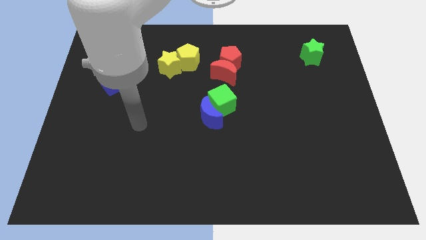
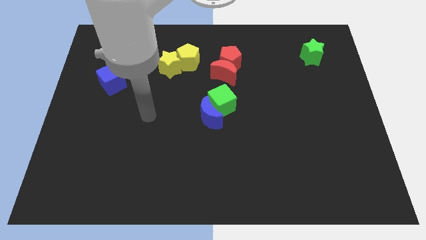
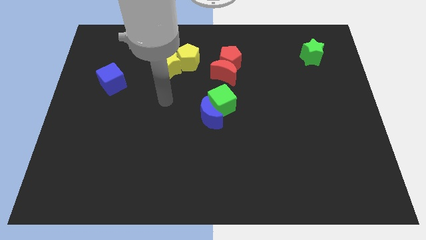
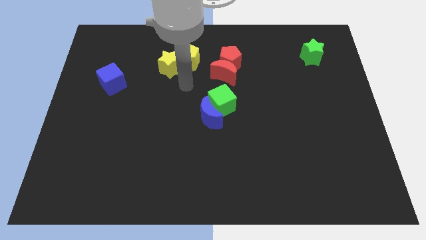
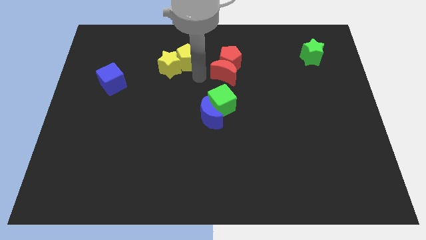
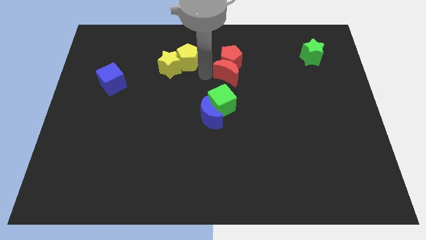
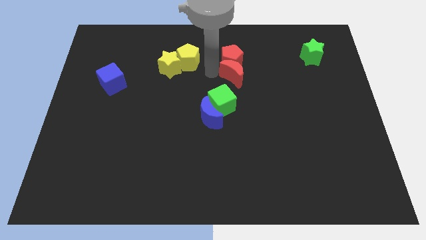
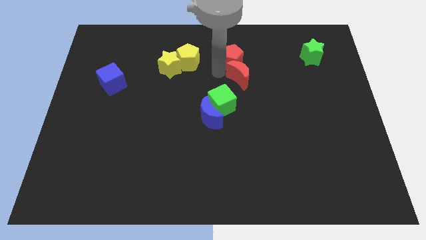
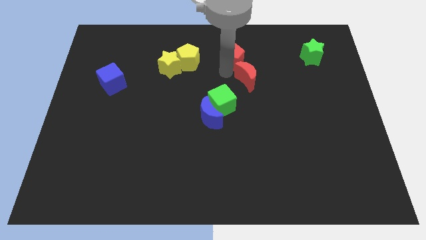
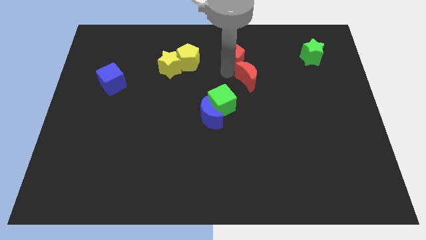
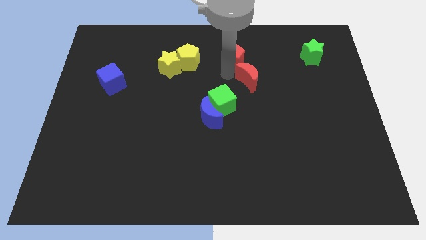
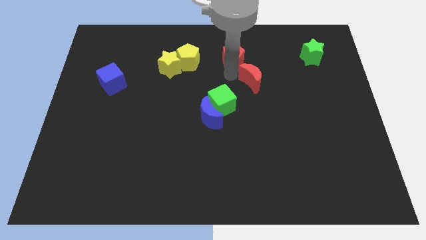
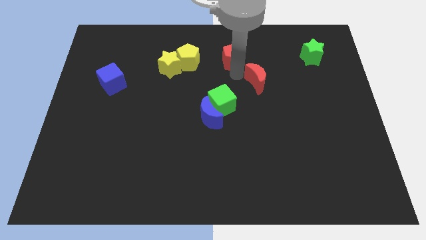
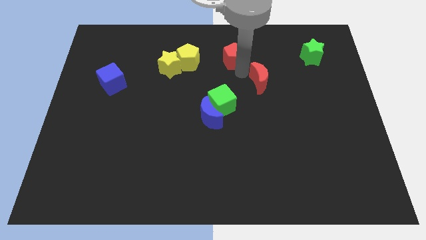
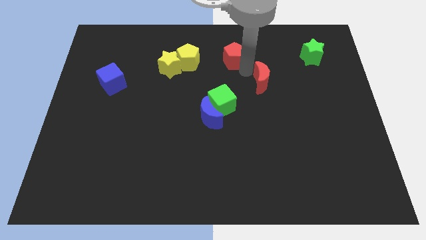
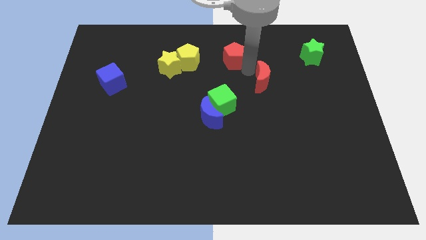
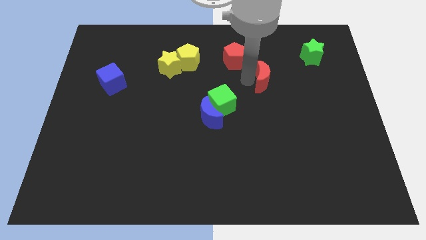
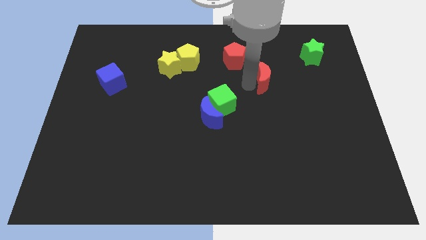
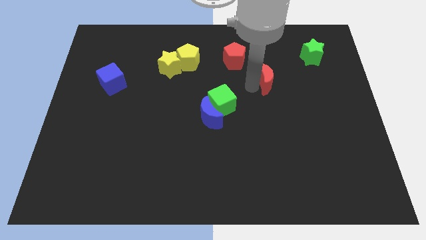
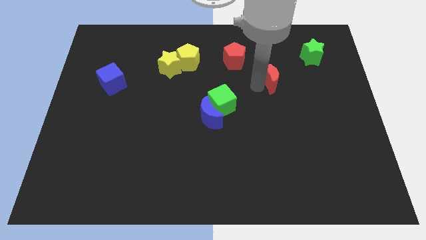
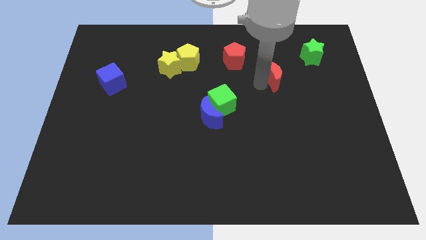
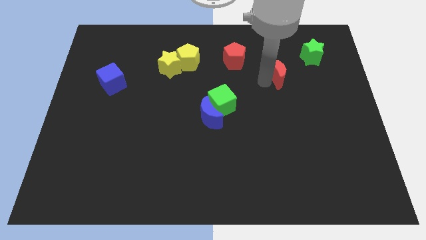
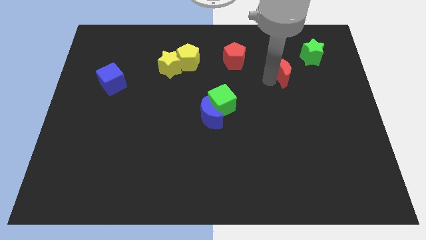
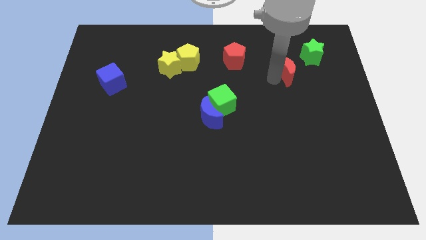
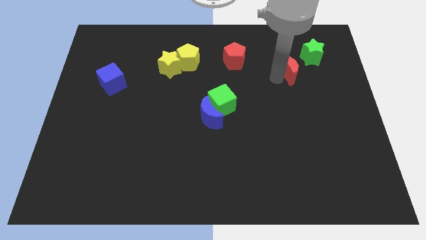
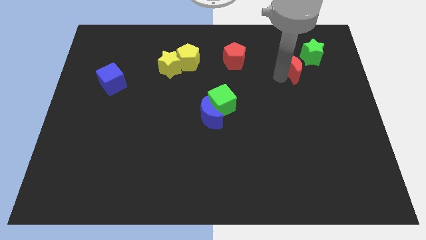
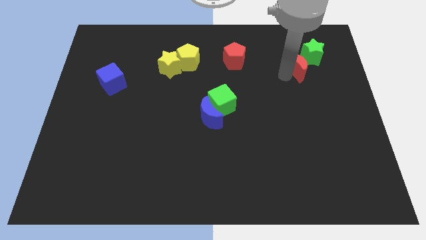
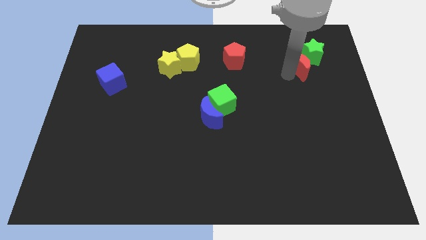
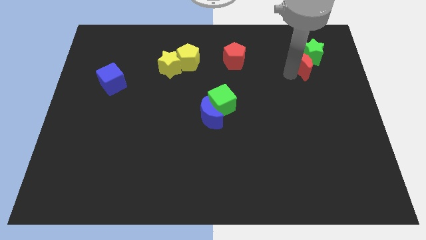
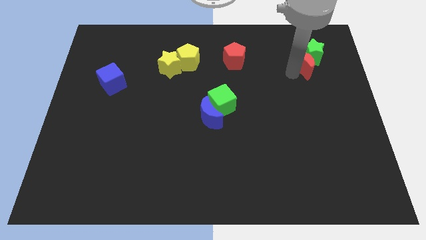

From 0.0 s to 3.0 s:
slide the red moon next to the green star

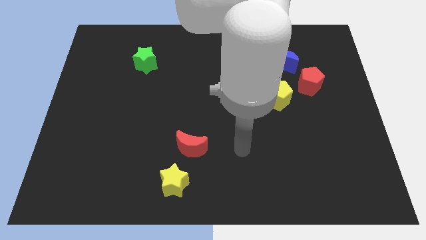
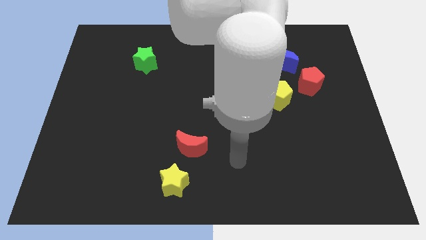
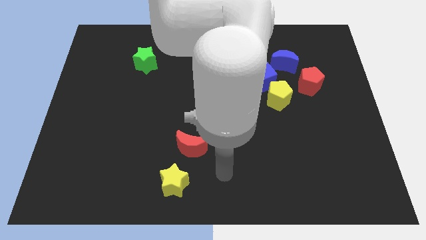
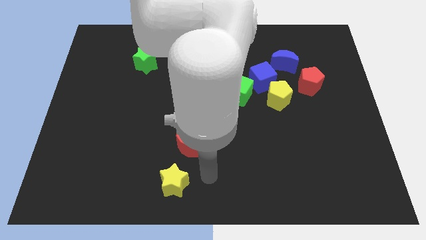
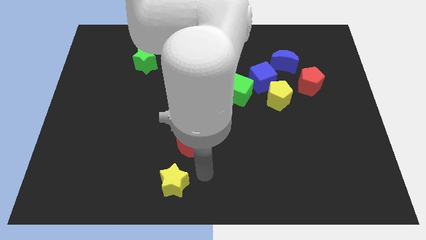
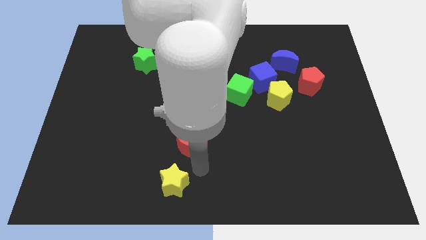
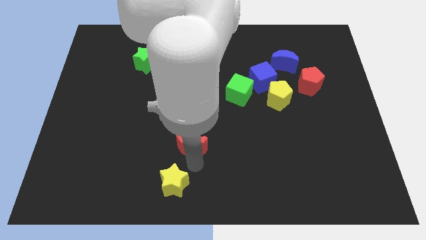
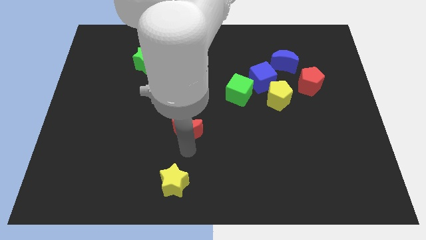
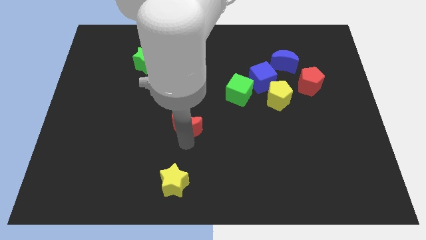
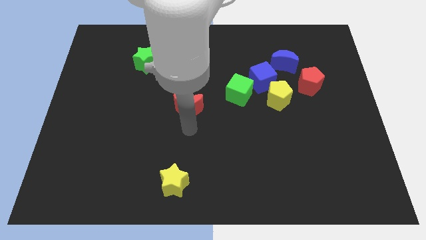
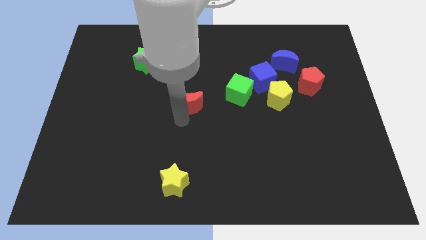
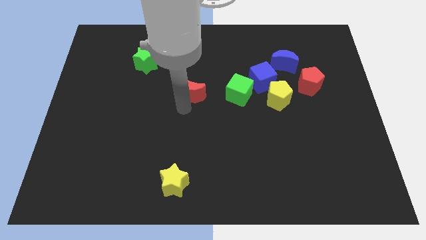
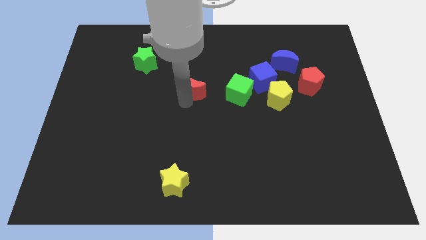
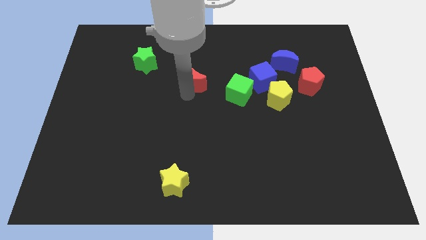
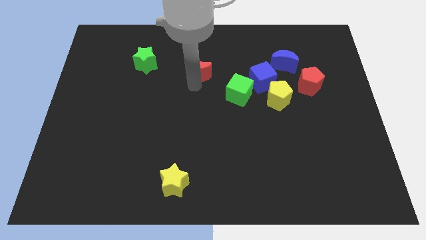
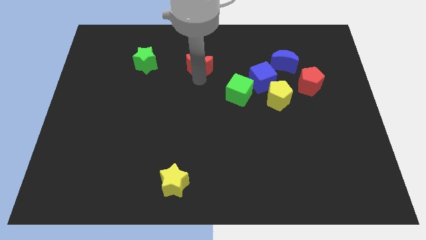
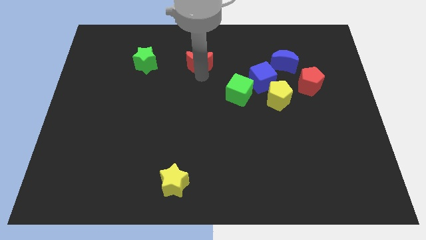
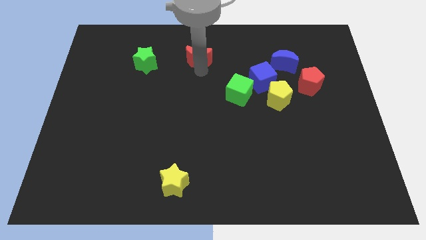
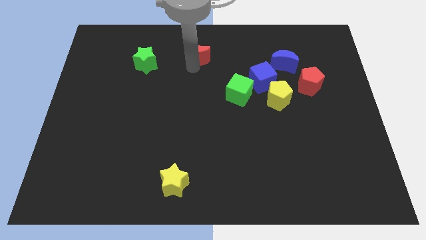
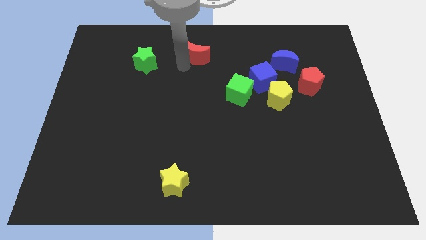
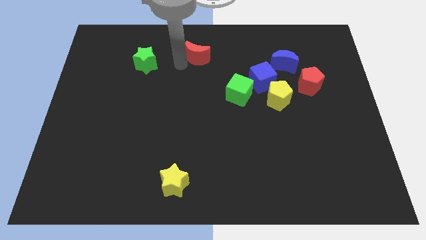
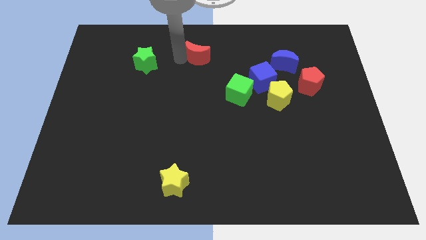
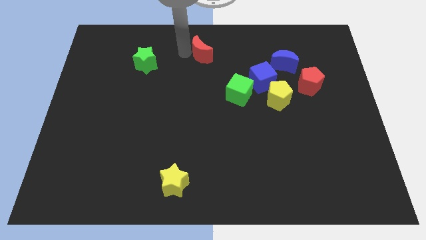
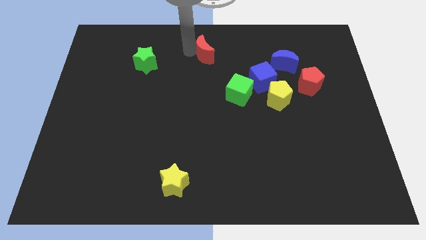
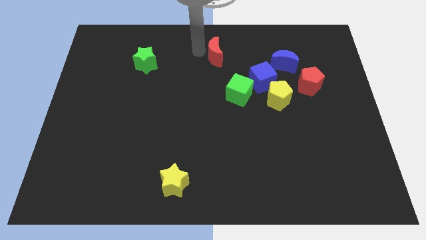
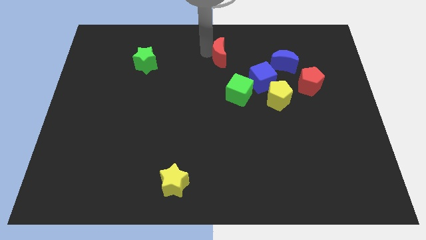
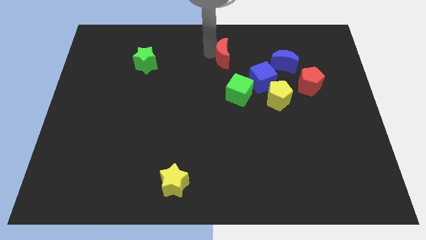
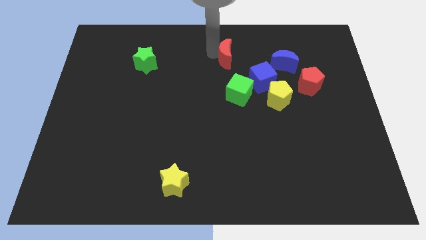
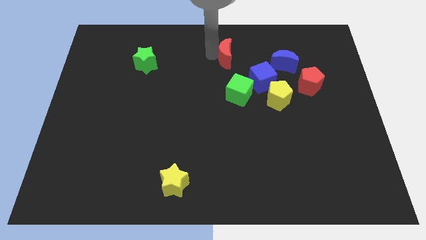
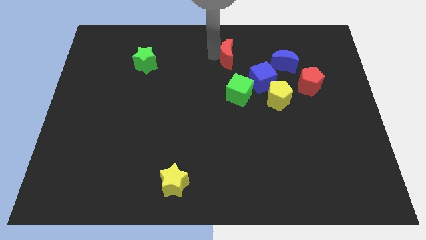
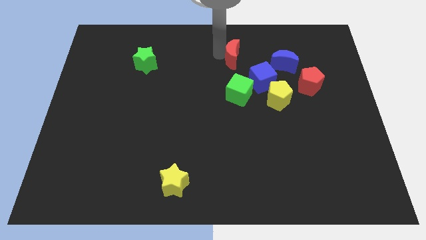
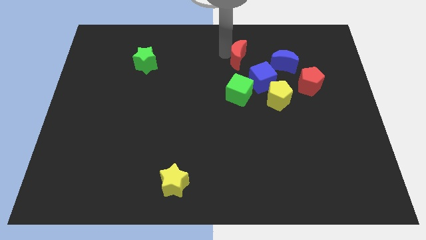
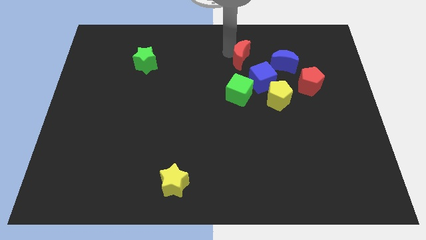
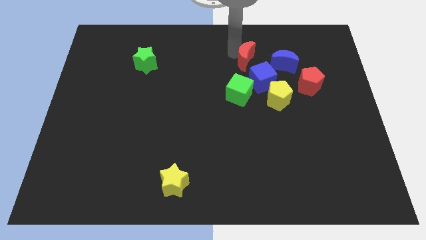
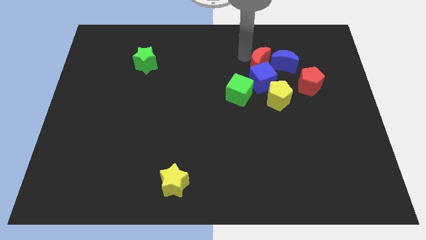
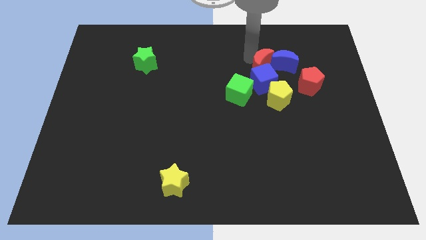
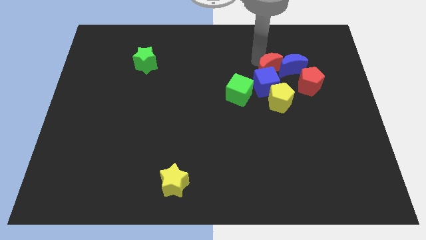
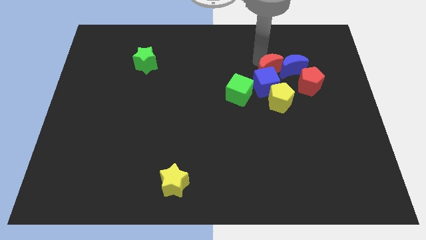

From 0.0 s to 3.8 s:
push the red moon towards the blue moon

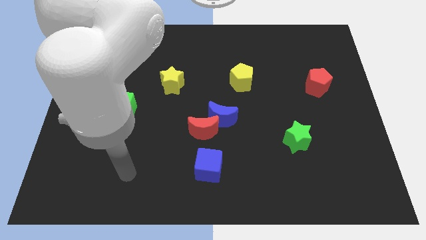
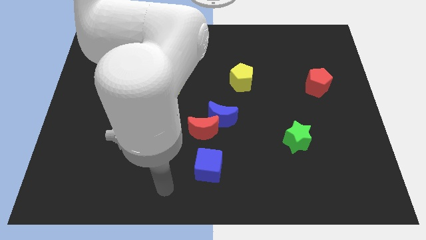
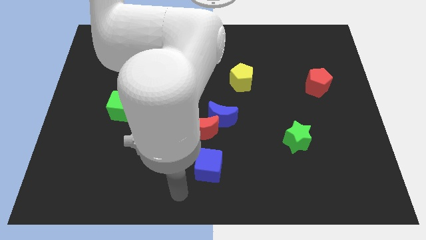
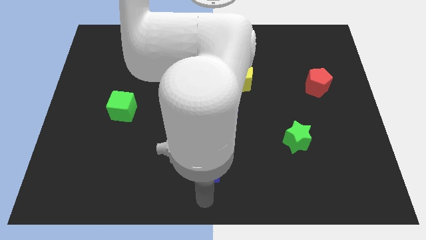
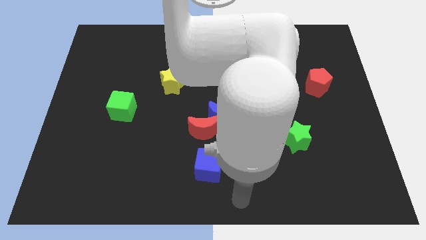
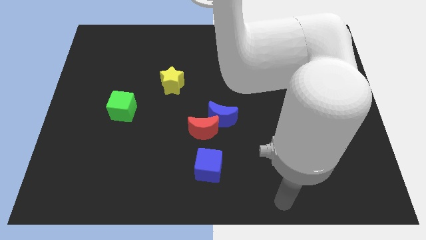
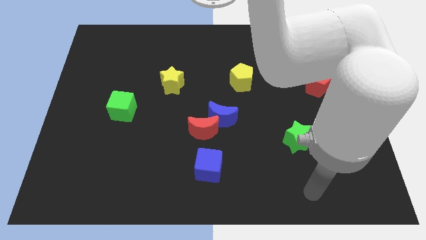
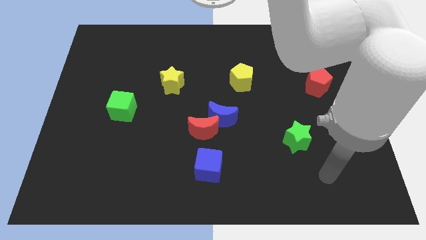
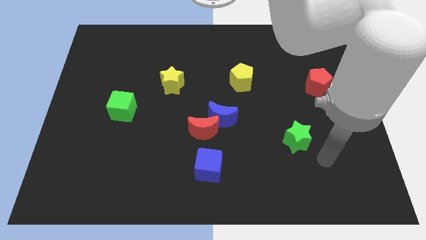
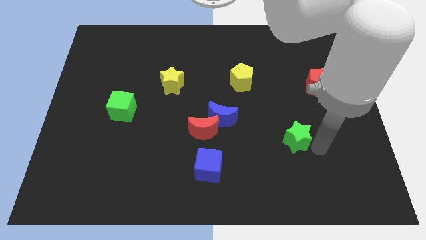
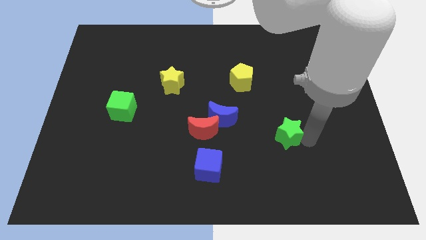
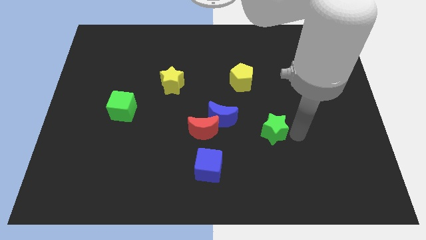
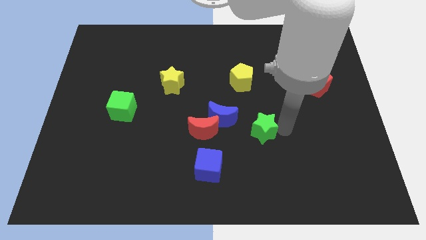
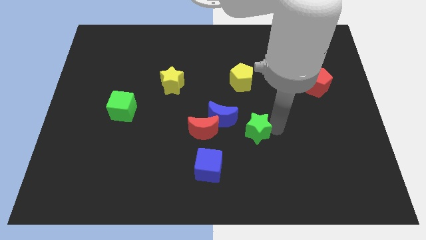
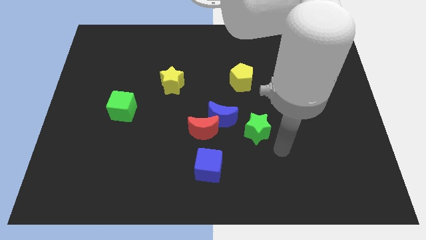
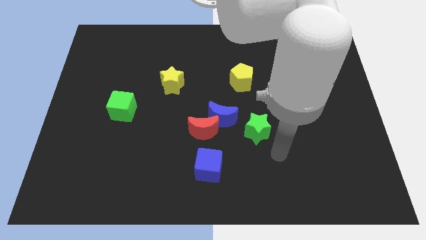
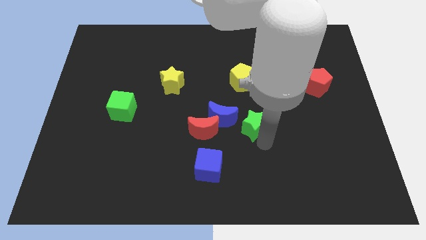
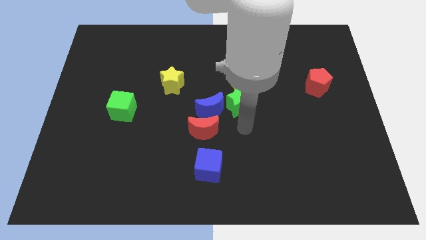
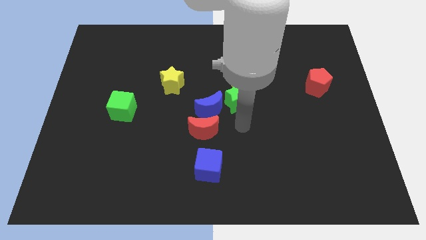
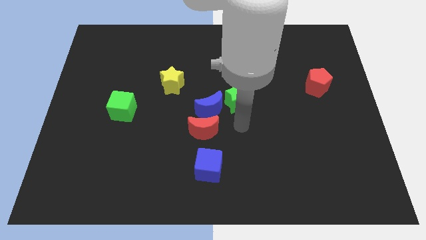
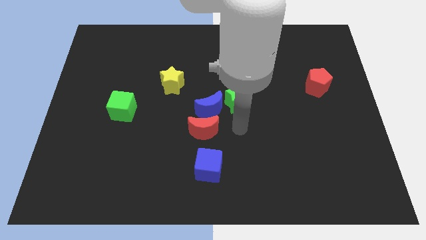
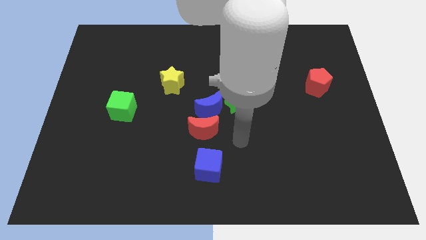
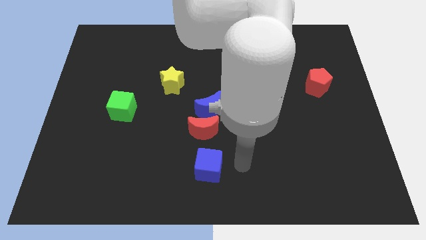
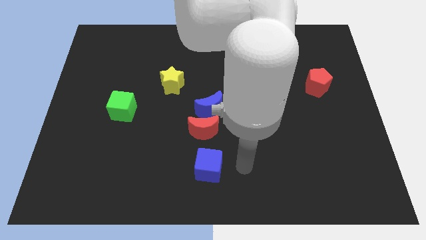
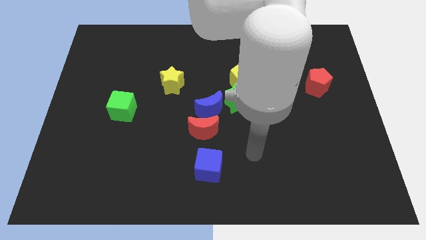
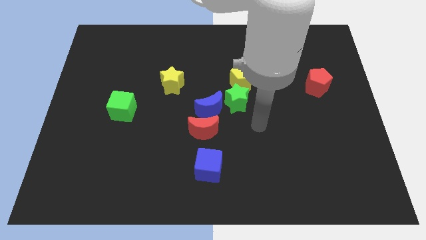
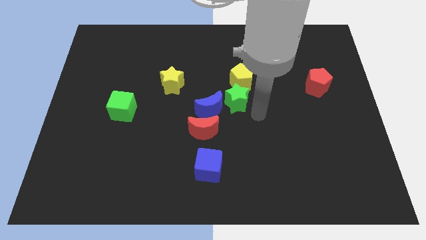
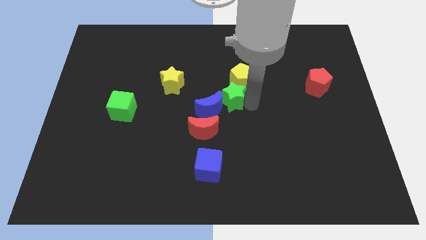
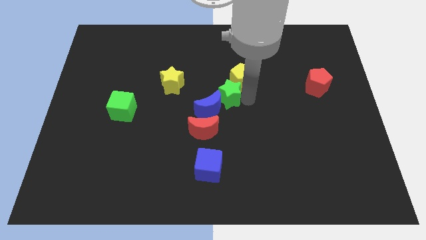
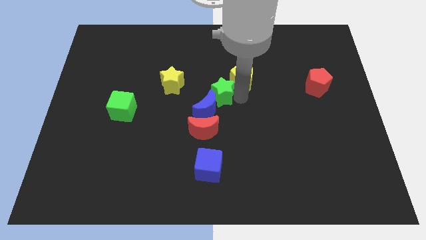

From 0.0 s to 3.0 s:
push the green star close to the blue moon
